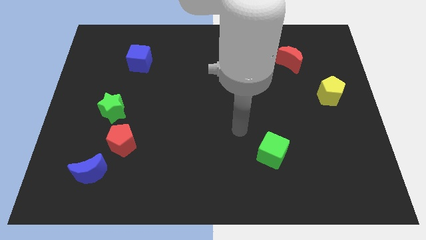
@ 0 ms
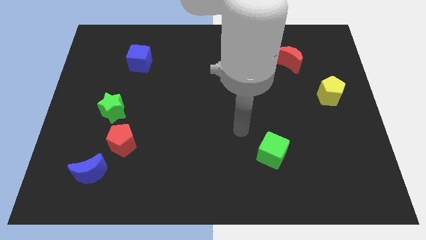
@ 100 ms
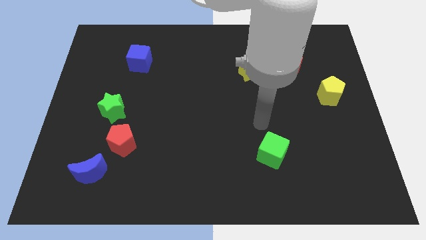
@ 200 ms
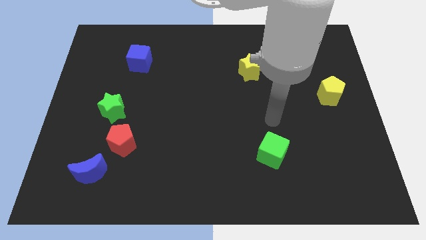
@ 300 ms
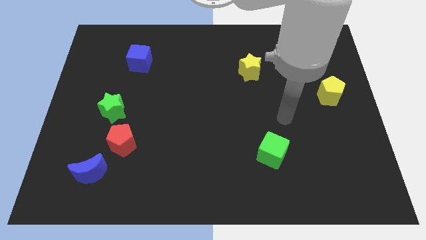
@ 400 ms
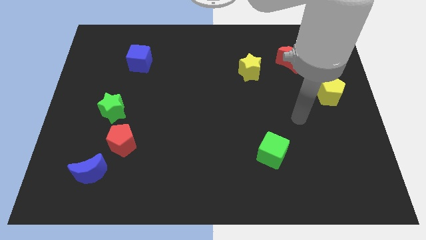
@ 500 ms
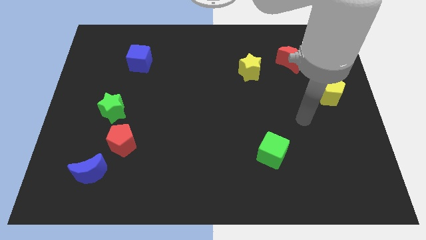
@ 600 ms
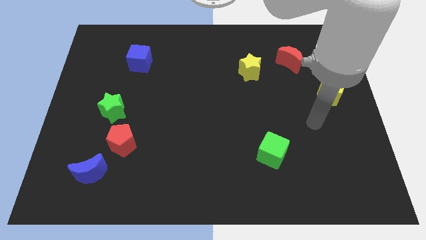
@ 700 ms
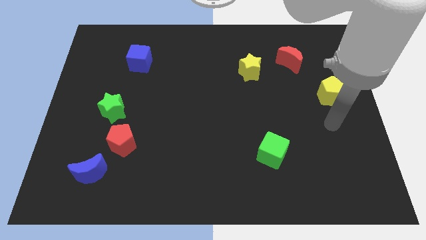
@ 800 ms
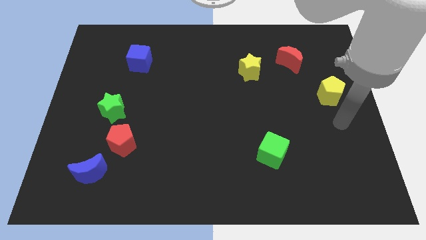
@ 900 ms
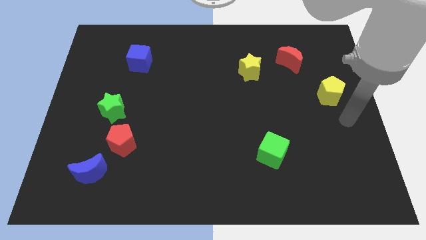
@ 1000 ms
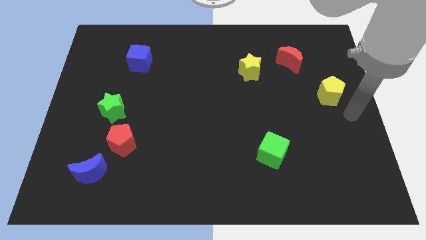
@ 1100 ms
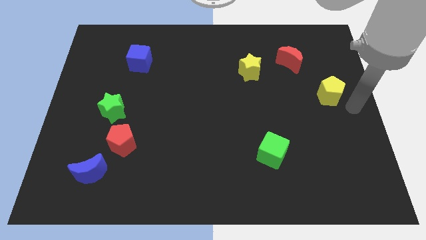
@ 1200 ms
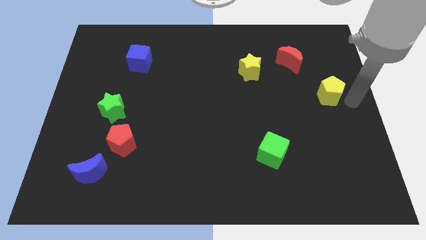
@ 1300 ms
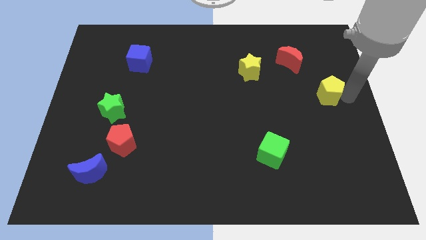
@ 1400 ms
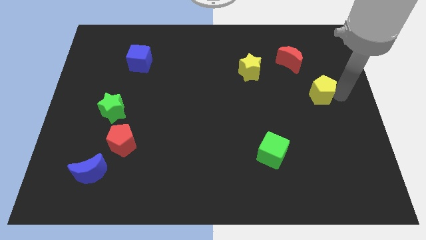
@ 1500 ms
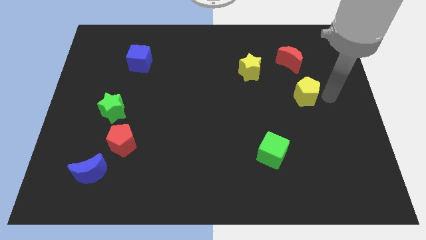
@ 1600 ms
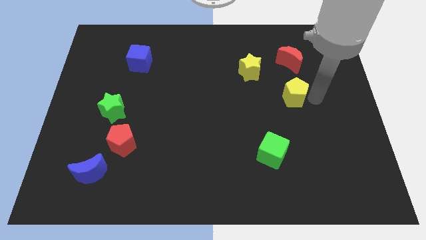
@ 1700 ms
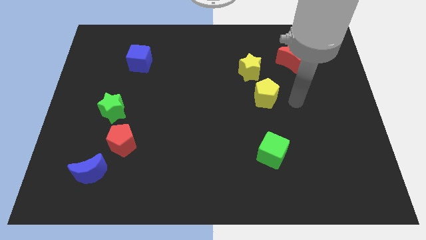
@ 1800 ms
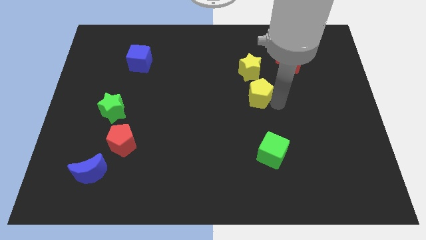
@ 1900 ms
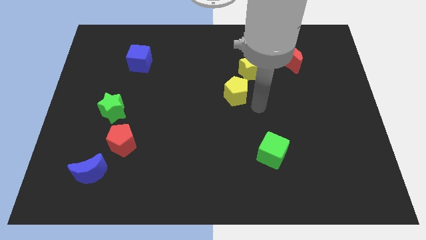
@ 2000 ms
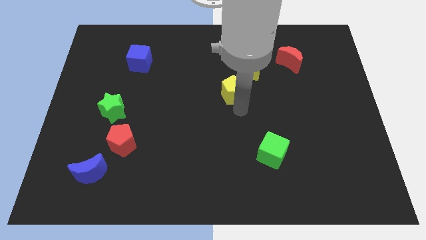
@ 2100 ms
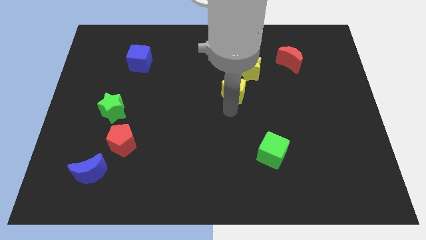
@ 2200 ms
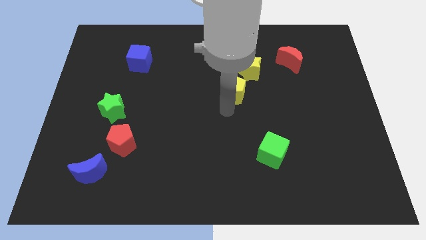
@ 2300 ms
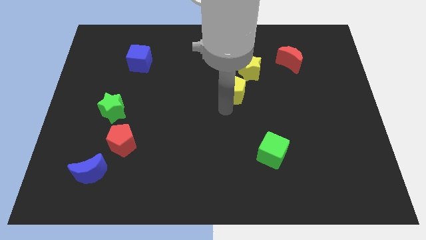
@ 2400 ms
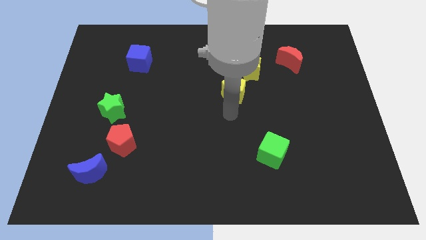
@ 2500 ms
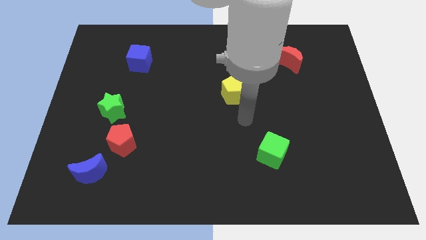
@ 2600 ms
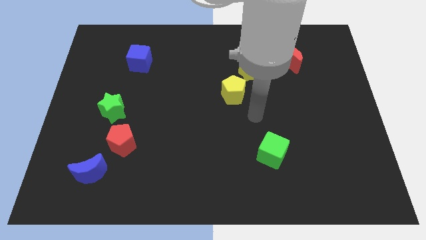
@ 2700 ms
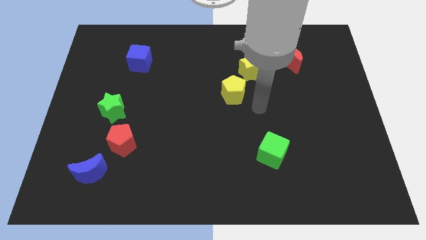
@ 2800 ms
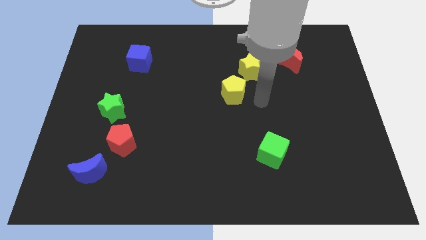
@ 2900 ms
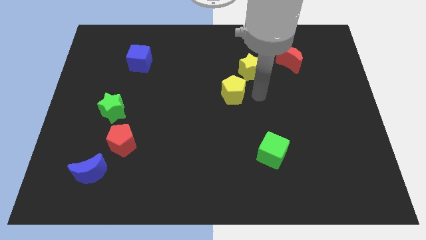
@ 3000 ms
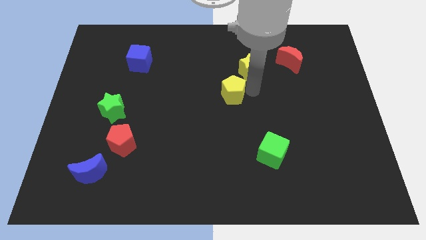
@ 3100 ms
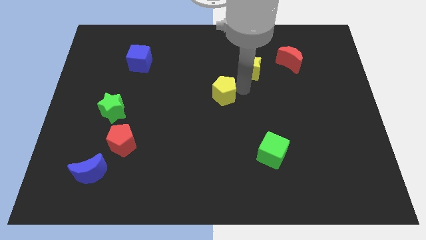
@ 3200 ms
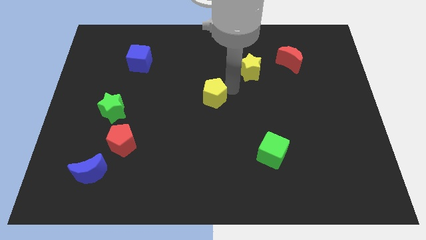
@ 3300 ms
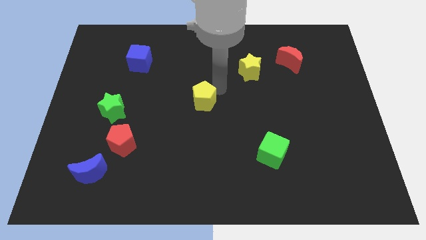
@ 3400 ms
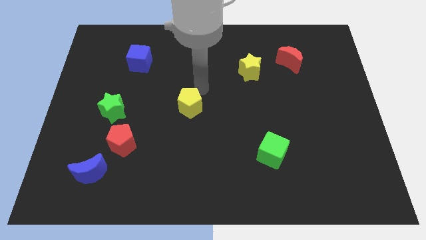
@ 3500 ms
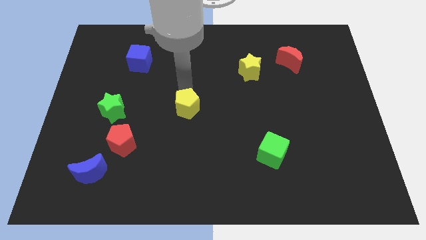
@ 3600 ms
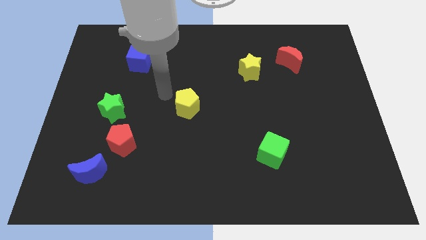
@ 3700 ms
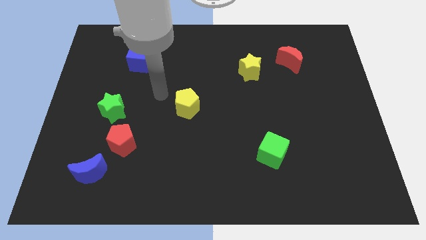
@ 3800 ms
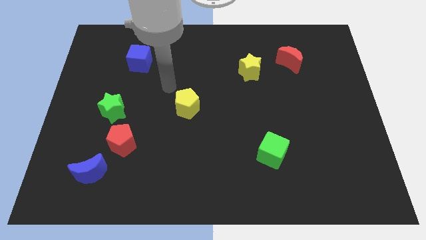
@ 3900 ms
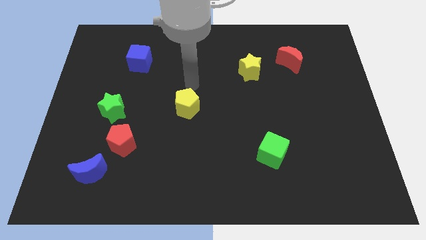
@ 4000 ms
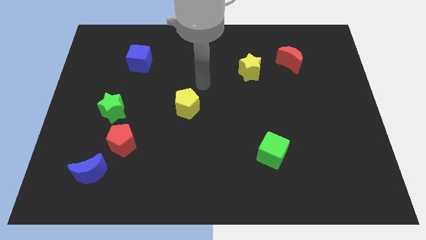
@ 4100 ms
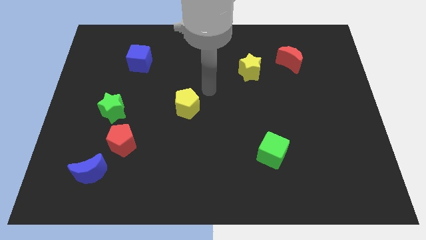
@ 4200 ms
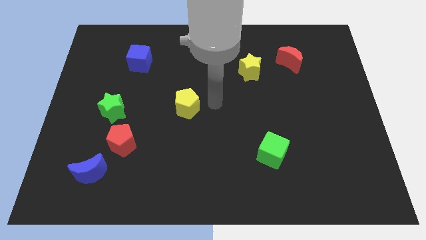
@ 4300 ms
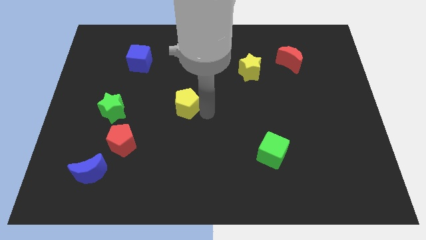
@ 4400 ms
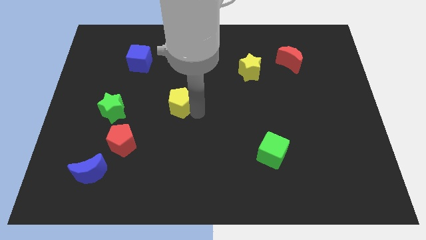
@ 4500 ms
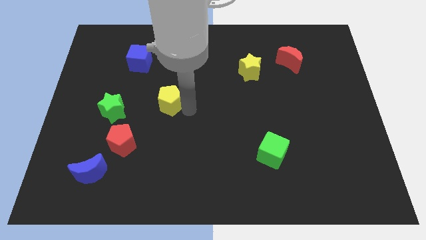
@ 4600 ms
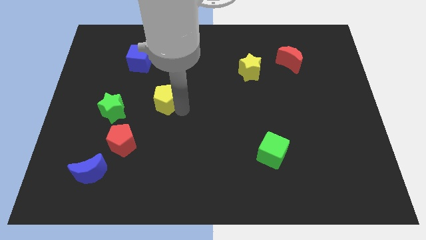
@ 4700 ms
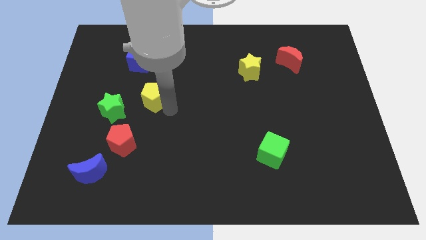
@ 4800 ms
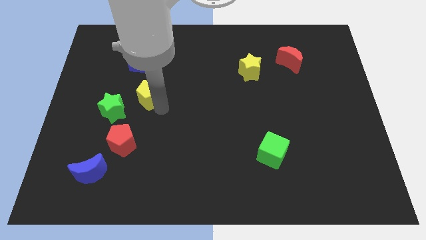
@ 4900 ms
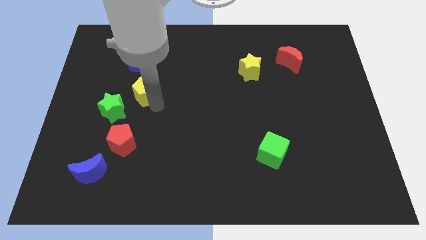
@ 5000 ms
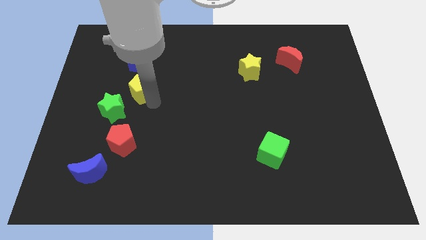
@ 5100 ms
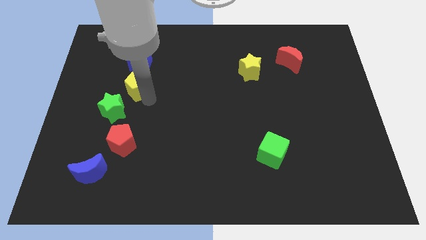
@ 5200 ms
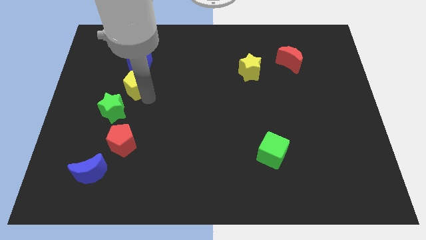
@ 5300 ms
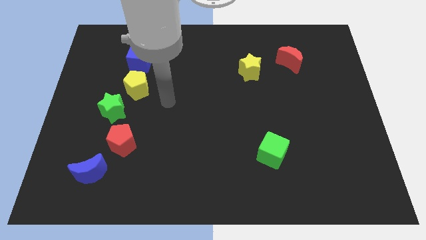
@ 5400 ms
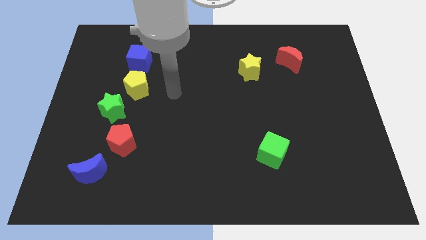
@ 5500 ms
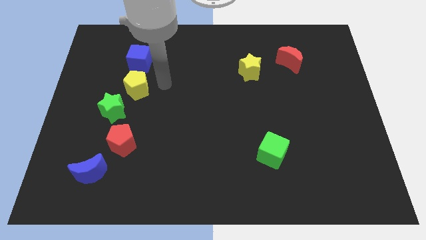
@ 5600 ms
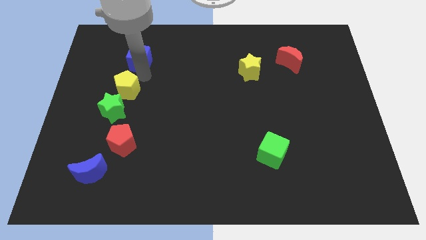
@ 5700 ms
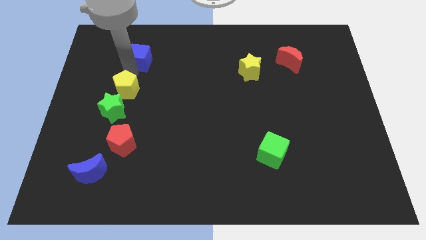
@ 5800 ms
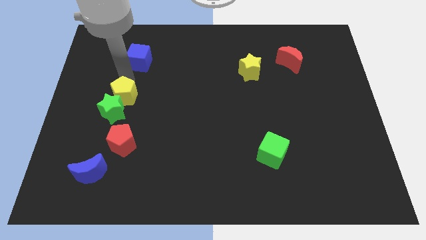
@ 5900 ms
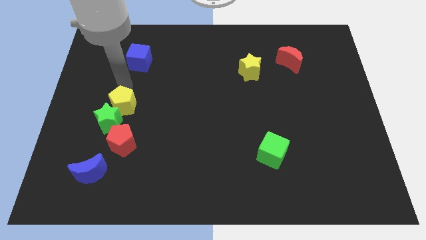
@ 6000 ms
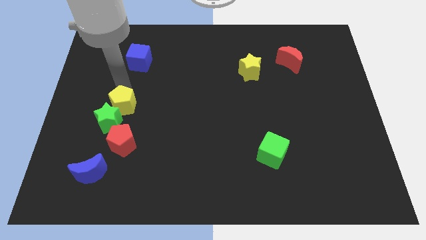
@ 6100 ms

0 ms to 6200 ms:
push the yellow pentagon towards the green star

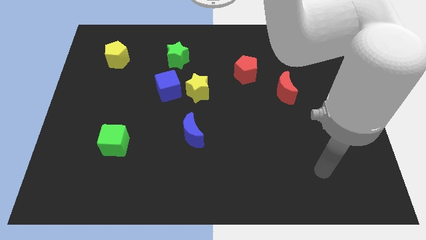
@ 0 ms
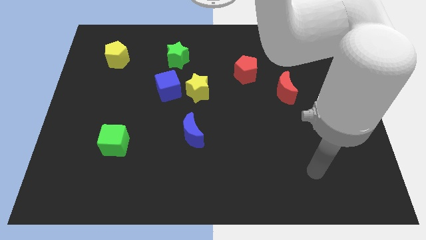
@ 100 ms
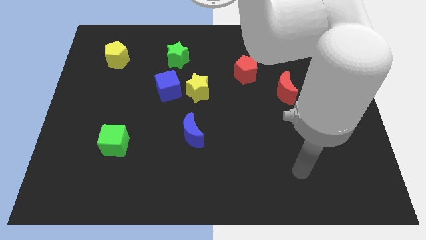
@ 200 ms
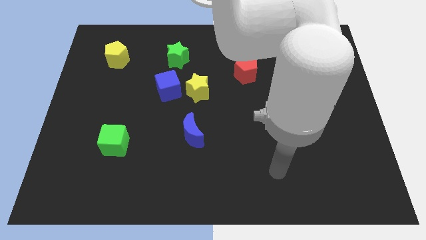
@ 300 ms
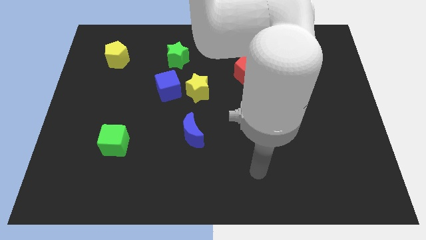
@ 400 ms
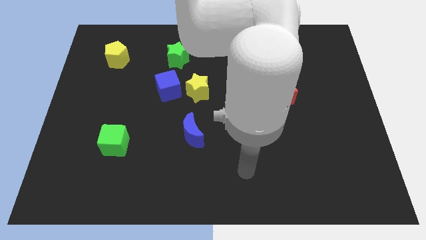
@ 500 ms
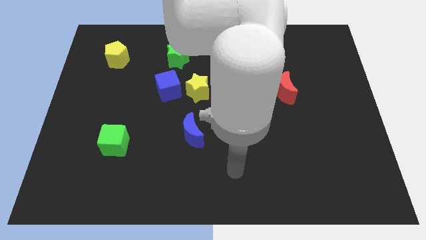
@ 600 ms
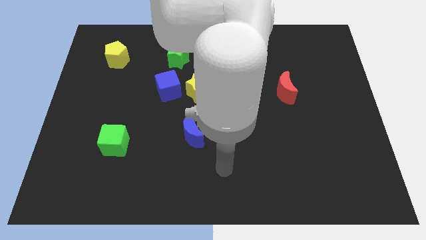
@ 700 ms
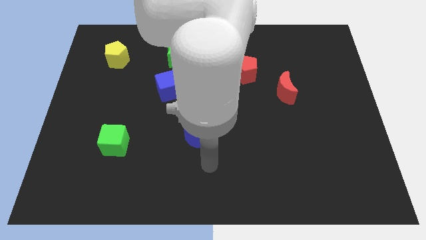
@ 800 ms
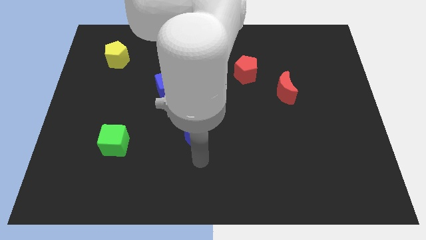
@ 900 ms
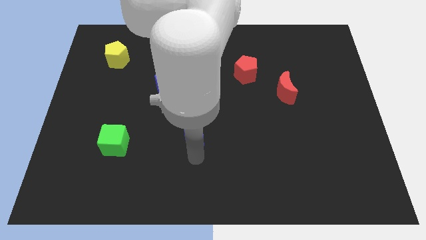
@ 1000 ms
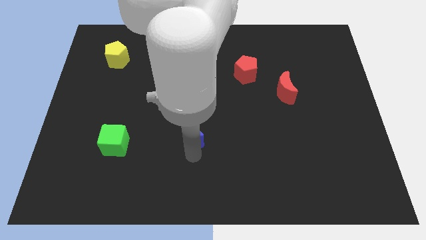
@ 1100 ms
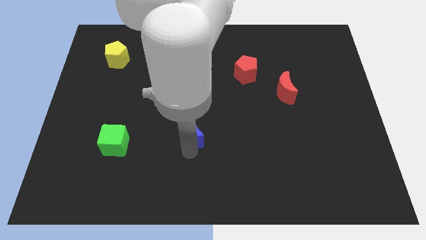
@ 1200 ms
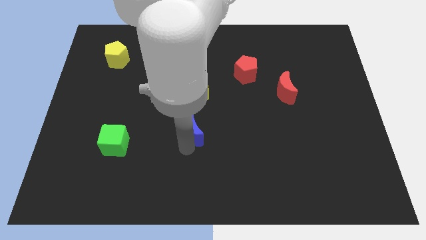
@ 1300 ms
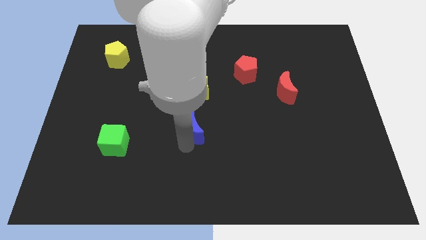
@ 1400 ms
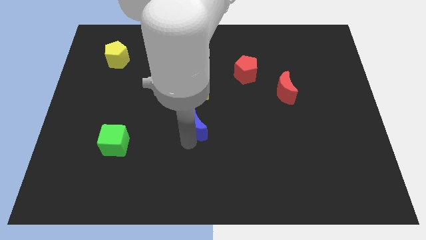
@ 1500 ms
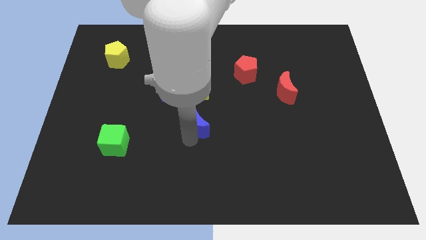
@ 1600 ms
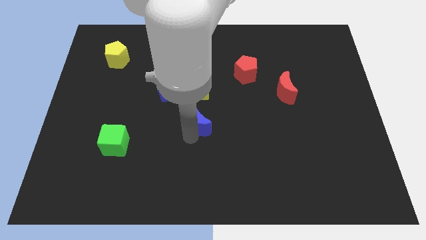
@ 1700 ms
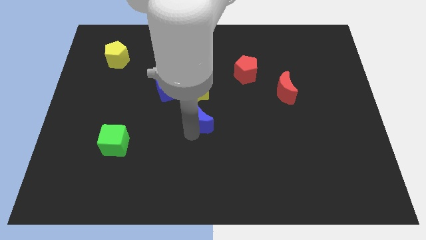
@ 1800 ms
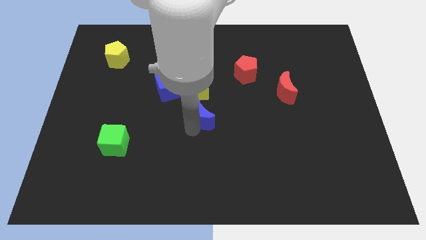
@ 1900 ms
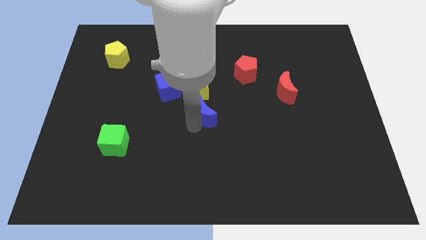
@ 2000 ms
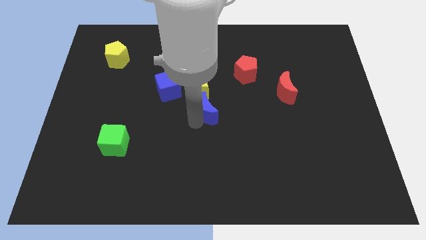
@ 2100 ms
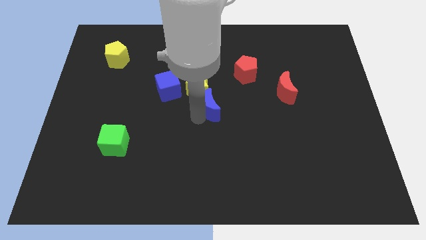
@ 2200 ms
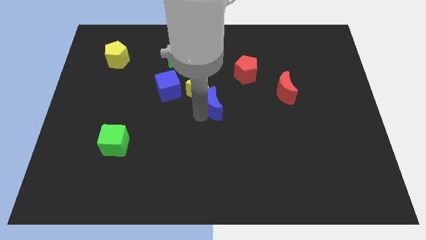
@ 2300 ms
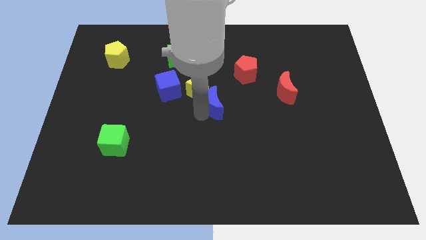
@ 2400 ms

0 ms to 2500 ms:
move the blue moon close to the yellow star
